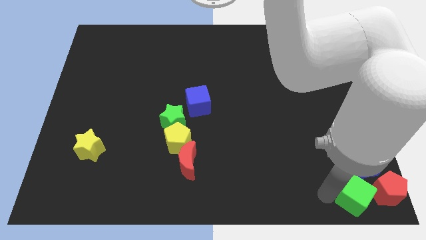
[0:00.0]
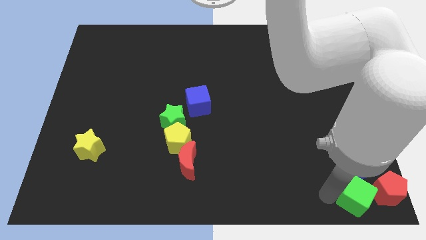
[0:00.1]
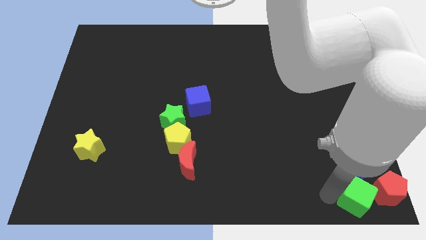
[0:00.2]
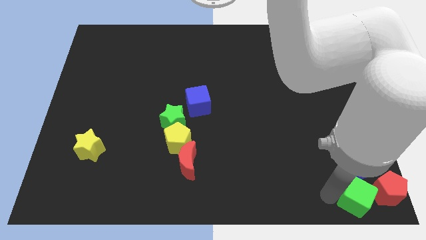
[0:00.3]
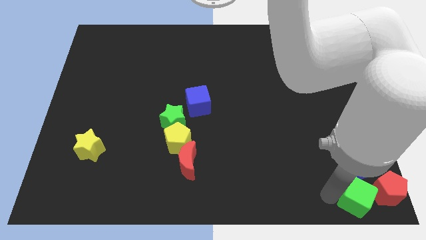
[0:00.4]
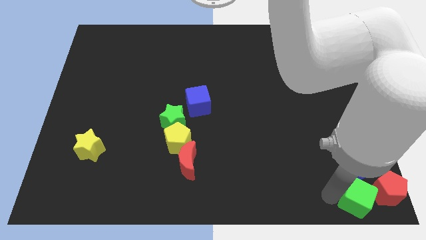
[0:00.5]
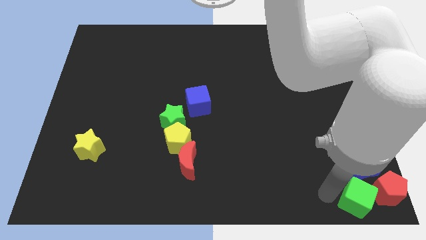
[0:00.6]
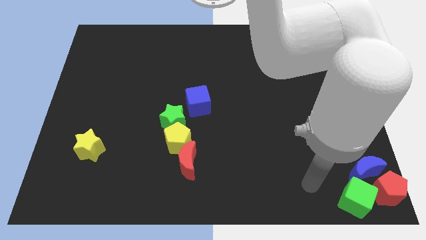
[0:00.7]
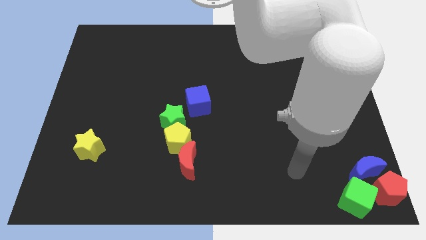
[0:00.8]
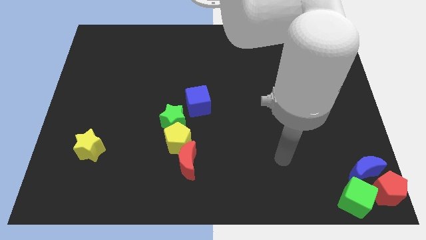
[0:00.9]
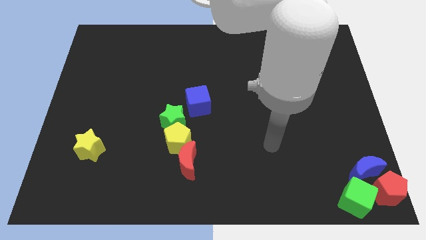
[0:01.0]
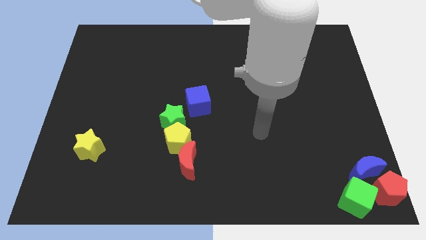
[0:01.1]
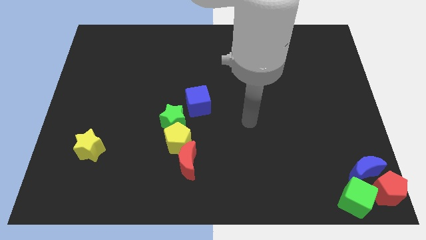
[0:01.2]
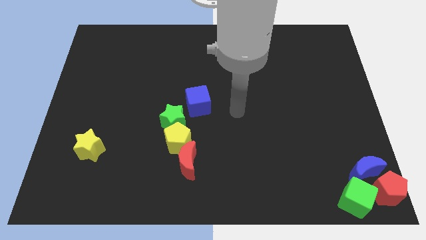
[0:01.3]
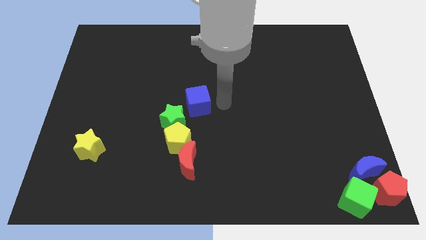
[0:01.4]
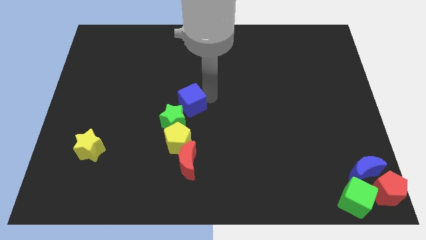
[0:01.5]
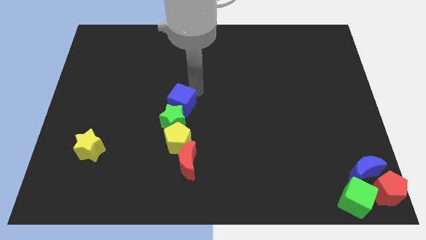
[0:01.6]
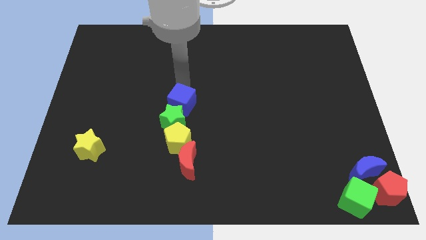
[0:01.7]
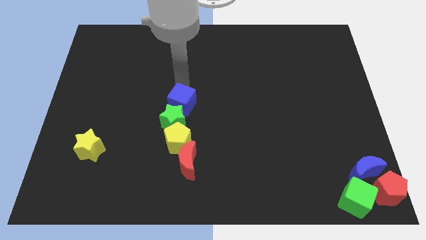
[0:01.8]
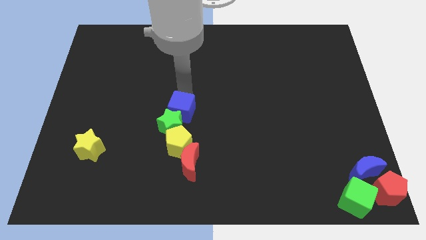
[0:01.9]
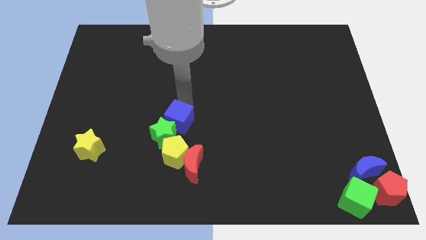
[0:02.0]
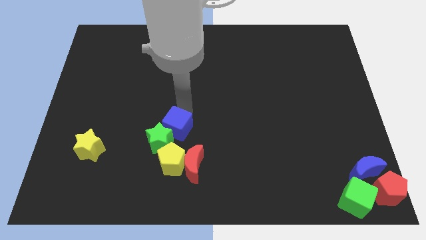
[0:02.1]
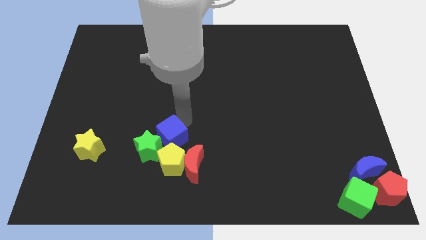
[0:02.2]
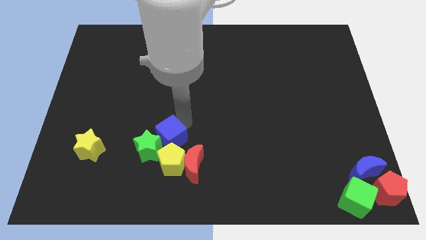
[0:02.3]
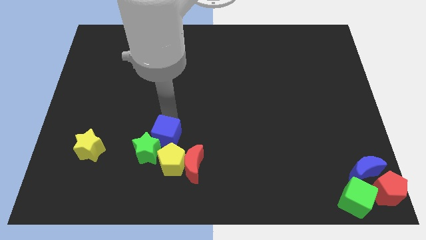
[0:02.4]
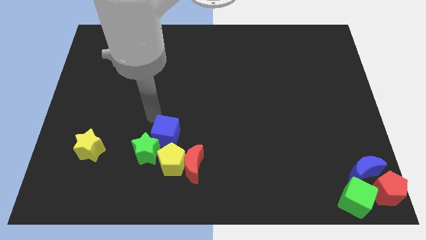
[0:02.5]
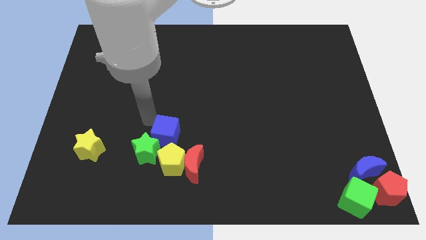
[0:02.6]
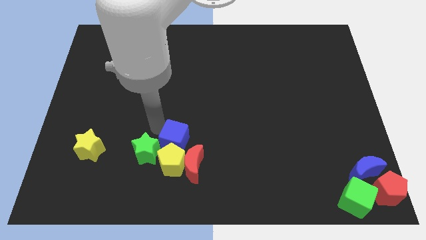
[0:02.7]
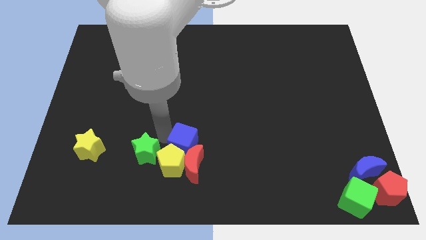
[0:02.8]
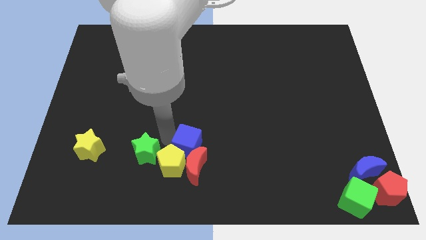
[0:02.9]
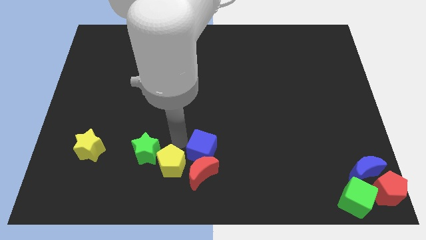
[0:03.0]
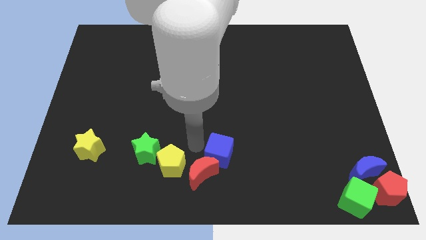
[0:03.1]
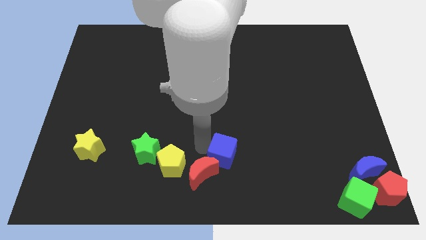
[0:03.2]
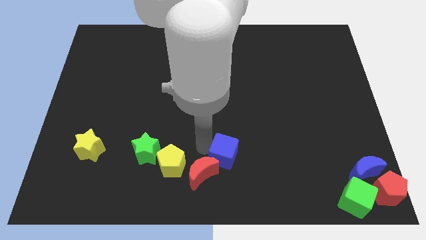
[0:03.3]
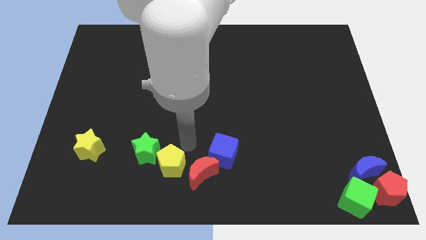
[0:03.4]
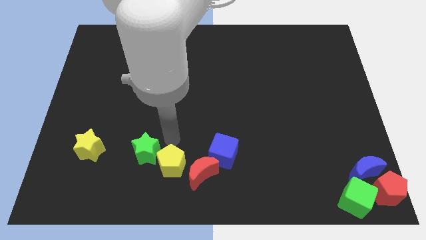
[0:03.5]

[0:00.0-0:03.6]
place blue cube to the top of red moon

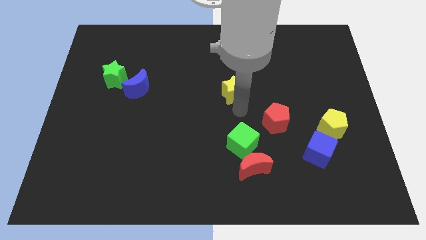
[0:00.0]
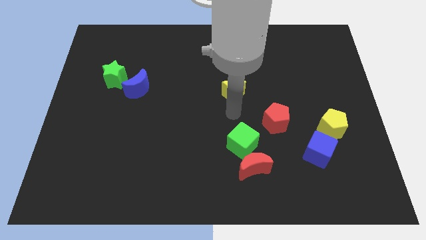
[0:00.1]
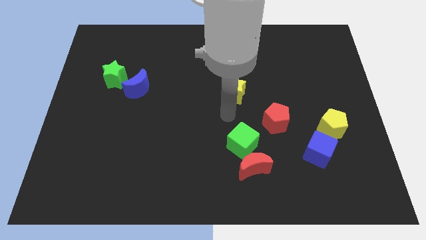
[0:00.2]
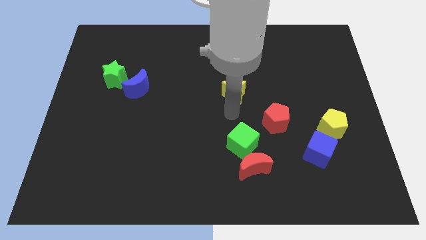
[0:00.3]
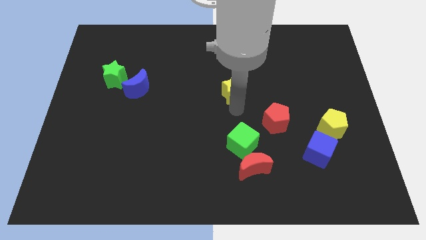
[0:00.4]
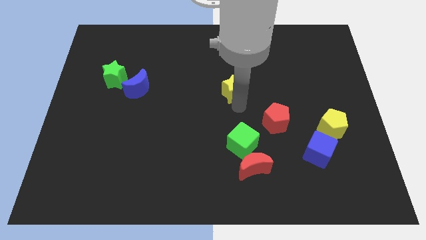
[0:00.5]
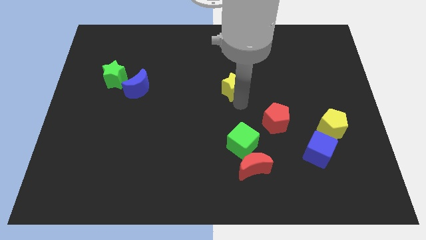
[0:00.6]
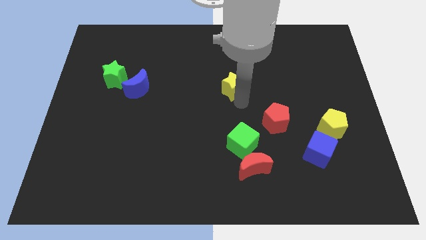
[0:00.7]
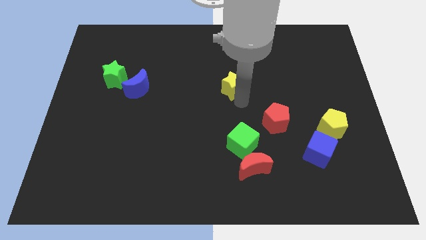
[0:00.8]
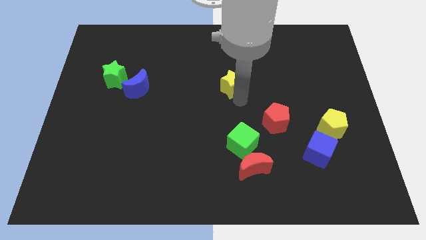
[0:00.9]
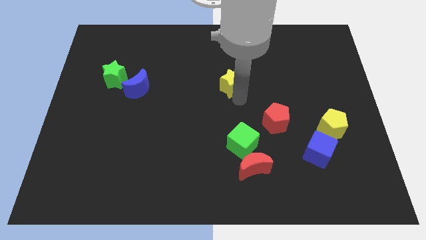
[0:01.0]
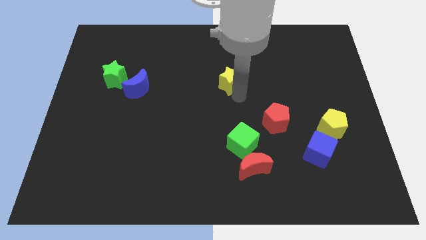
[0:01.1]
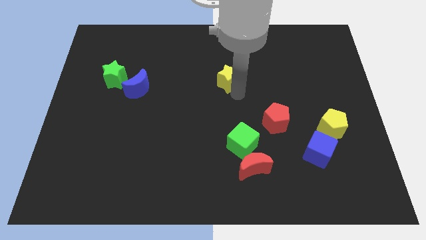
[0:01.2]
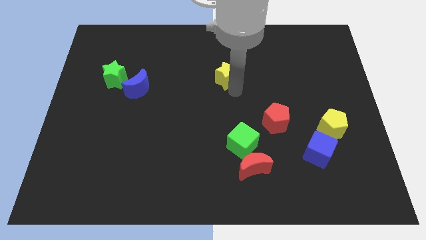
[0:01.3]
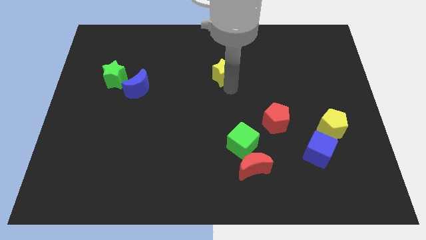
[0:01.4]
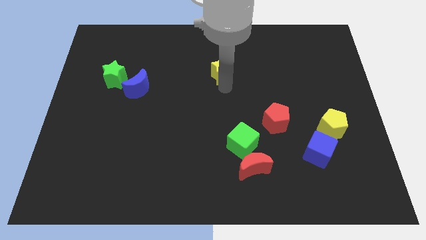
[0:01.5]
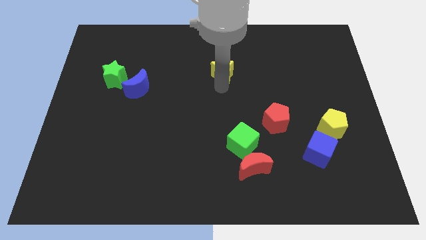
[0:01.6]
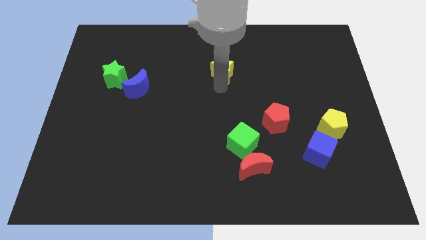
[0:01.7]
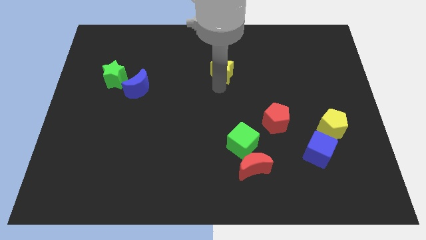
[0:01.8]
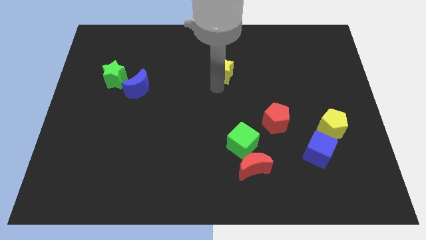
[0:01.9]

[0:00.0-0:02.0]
push the yellow star towards top

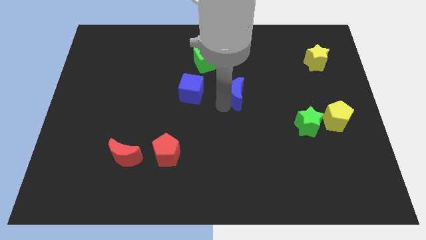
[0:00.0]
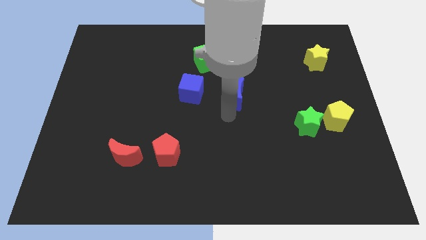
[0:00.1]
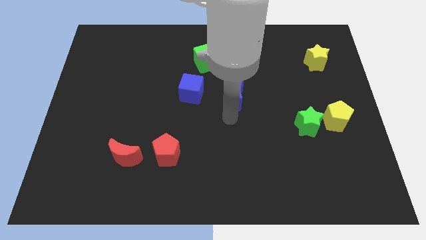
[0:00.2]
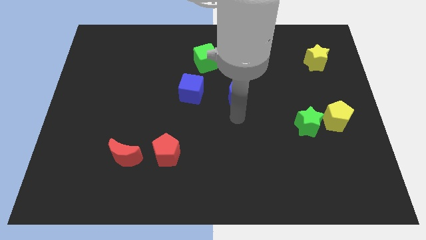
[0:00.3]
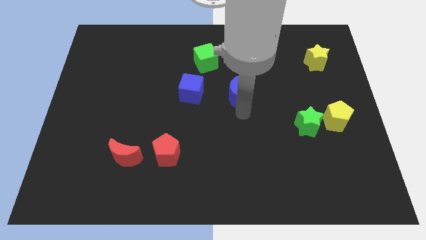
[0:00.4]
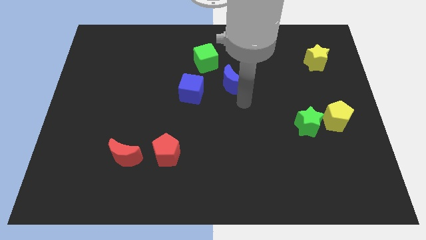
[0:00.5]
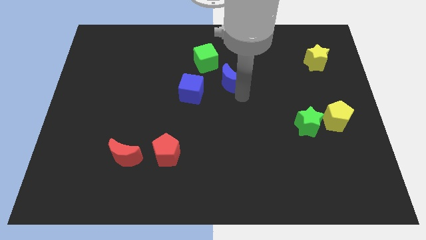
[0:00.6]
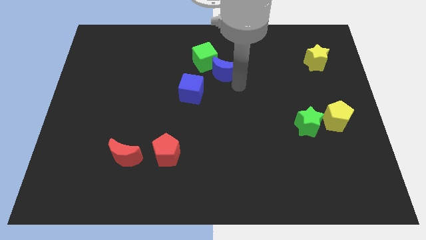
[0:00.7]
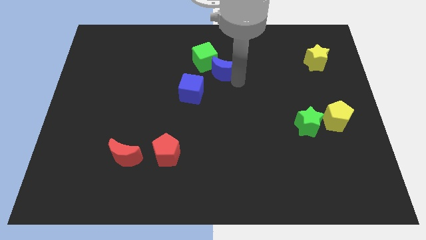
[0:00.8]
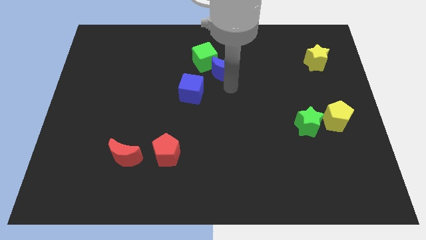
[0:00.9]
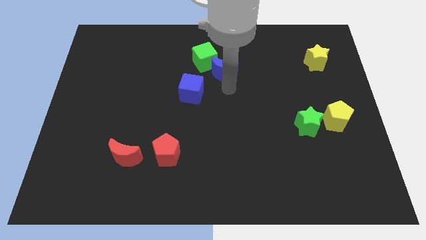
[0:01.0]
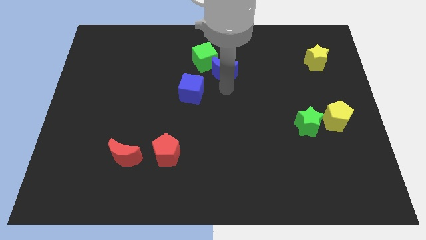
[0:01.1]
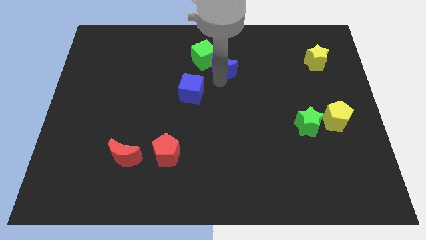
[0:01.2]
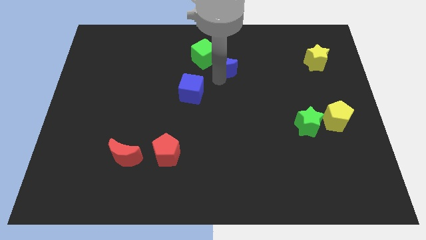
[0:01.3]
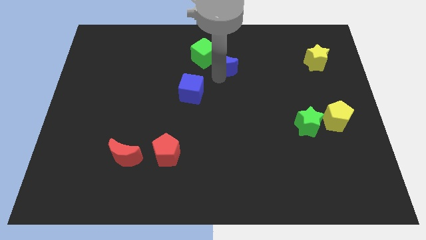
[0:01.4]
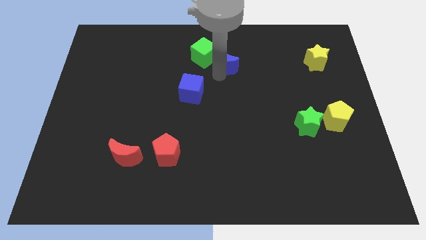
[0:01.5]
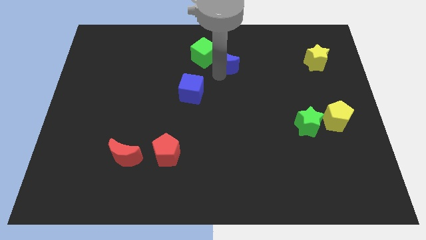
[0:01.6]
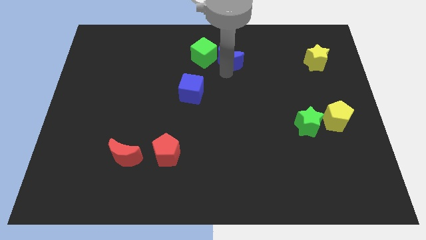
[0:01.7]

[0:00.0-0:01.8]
attach the blue moon to the green cube

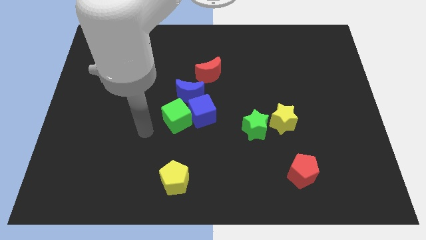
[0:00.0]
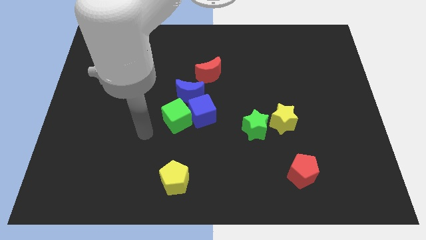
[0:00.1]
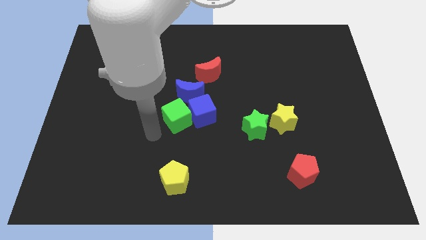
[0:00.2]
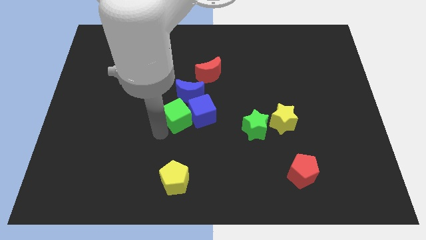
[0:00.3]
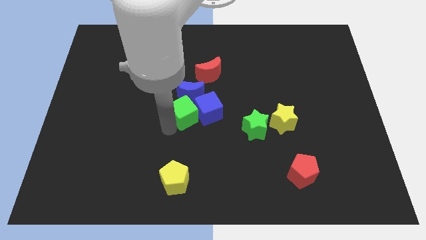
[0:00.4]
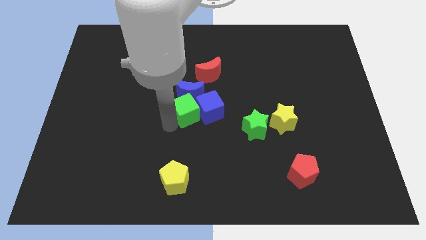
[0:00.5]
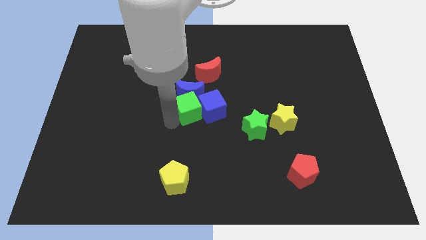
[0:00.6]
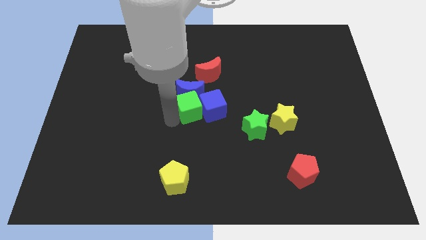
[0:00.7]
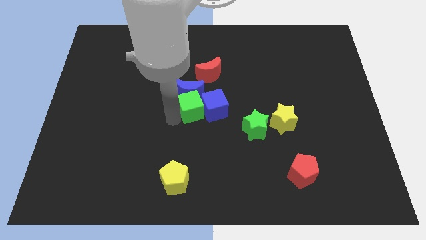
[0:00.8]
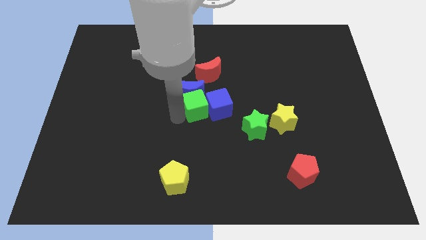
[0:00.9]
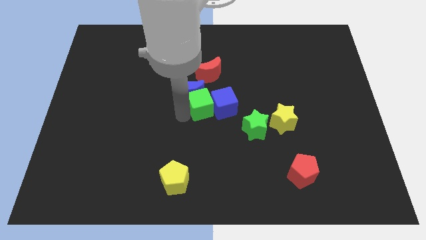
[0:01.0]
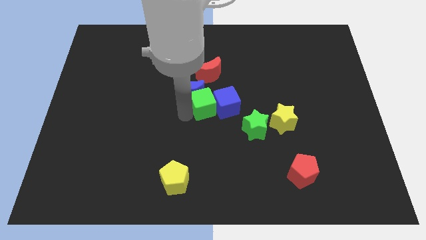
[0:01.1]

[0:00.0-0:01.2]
move the green cube down to the blue moon

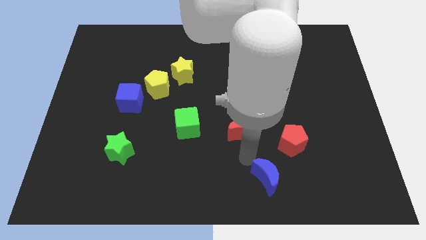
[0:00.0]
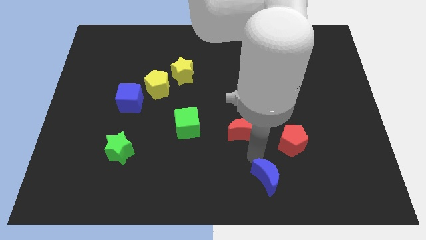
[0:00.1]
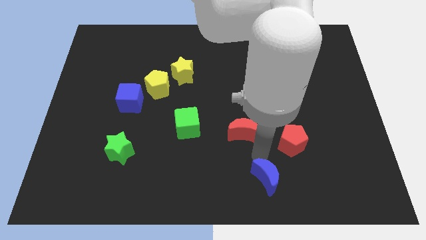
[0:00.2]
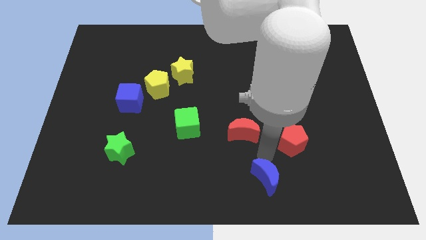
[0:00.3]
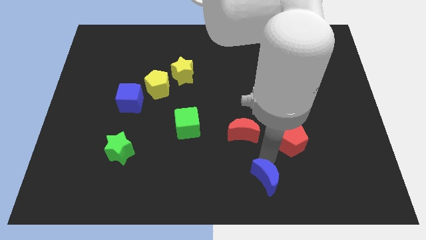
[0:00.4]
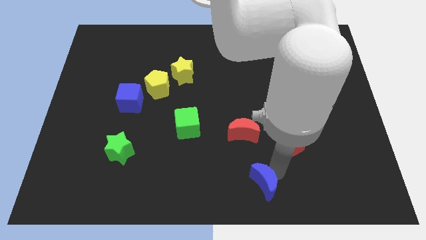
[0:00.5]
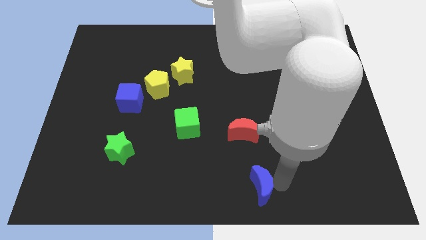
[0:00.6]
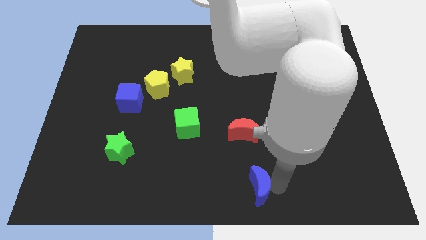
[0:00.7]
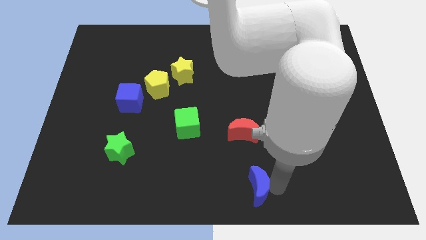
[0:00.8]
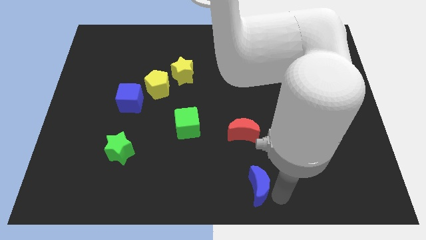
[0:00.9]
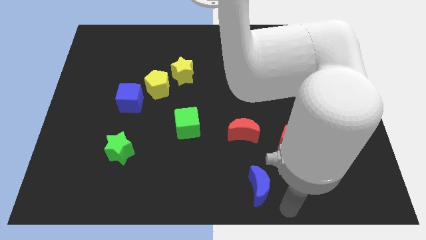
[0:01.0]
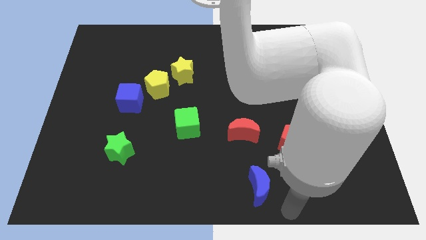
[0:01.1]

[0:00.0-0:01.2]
slightly adjust the blue crescent vertically bottom to the red crescent
